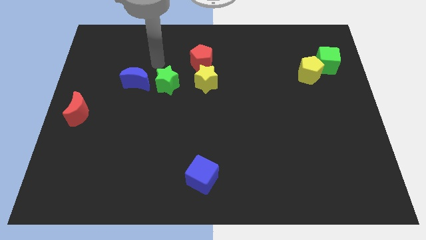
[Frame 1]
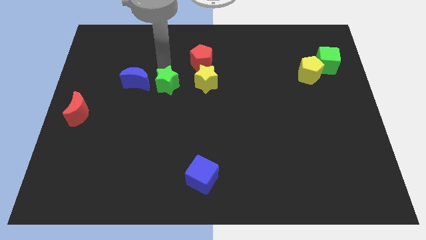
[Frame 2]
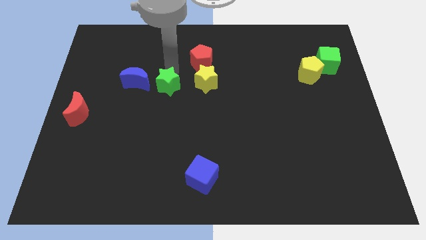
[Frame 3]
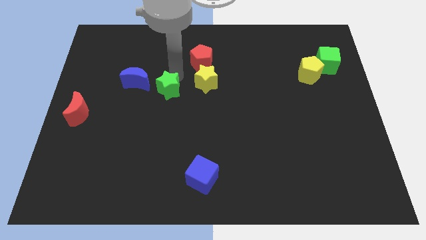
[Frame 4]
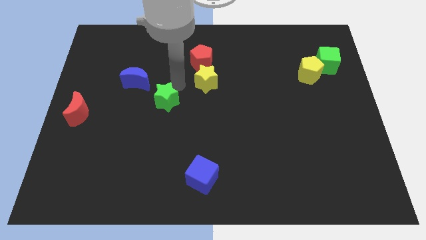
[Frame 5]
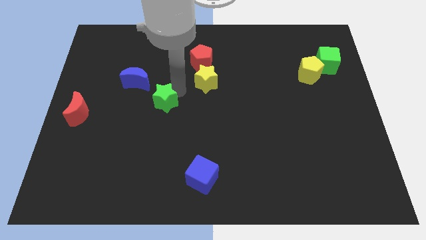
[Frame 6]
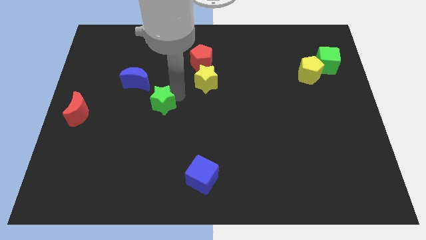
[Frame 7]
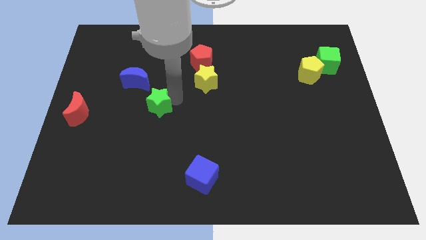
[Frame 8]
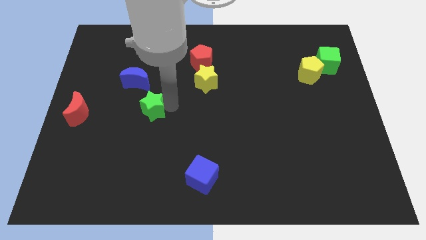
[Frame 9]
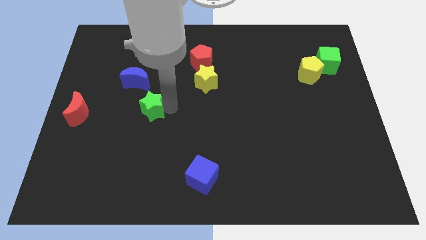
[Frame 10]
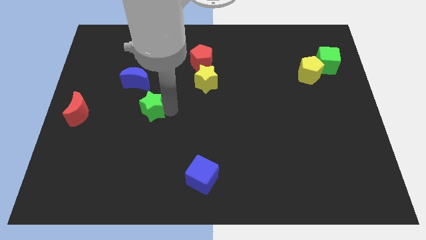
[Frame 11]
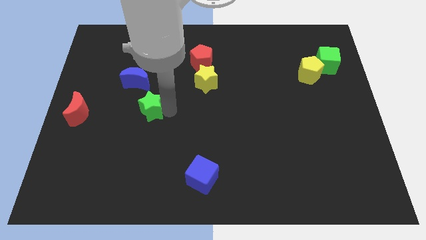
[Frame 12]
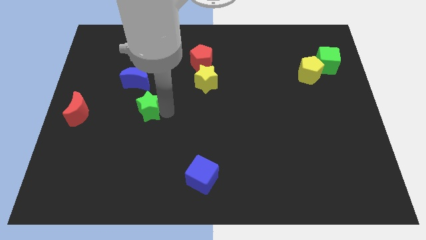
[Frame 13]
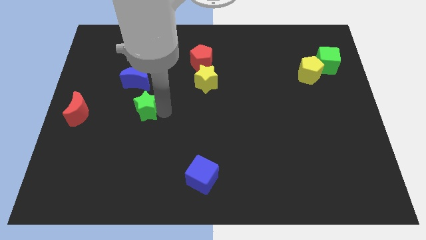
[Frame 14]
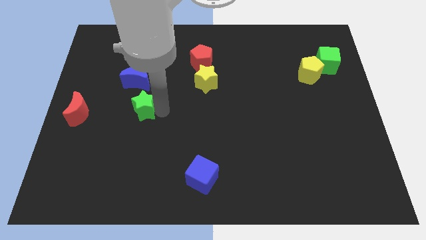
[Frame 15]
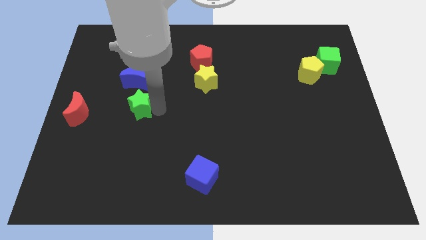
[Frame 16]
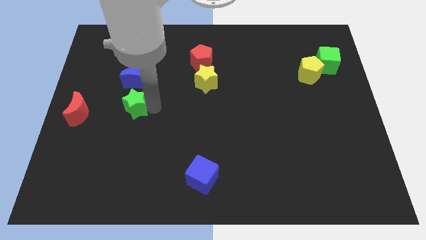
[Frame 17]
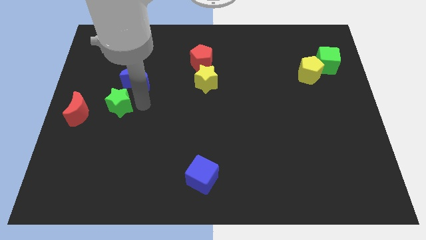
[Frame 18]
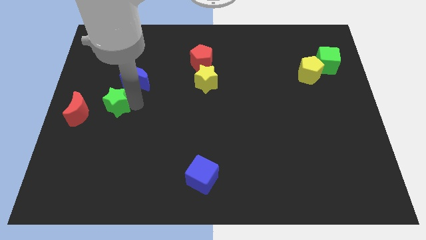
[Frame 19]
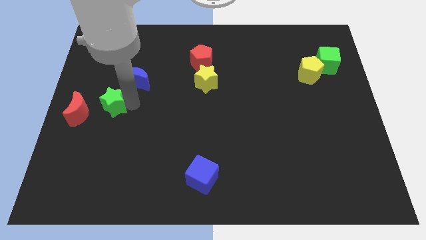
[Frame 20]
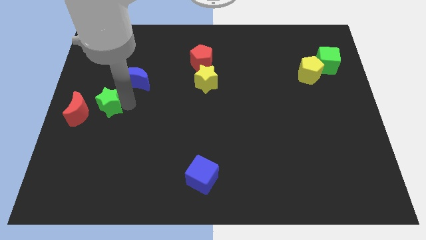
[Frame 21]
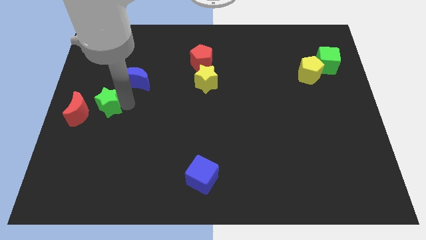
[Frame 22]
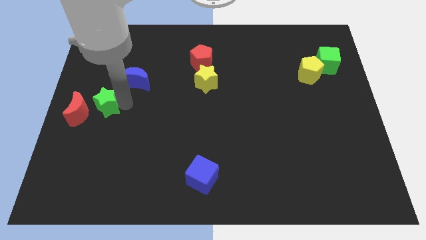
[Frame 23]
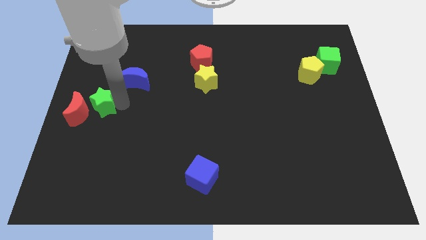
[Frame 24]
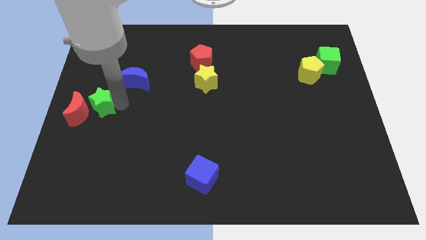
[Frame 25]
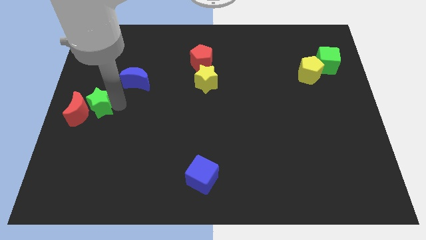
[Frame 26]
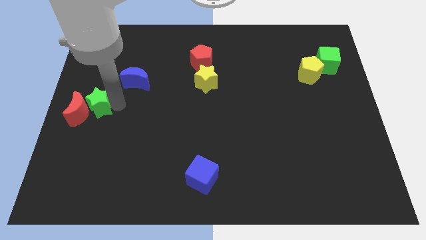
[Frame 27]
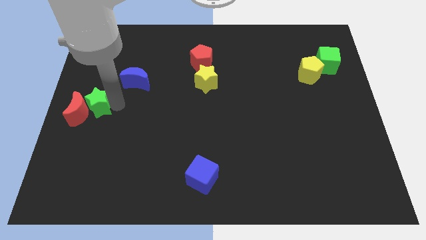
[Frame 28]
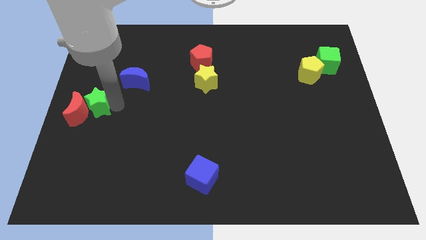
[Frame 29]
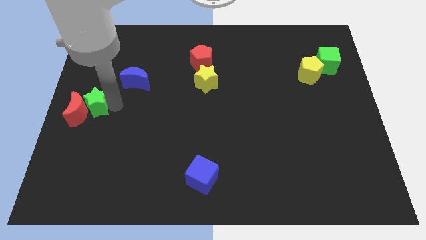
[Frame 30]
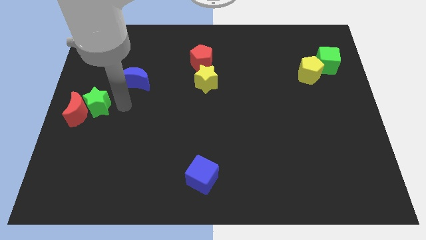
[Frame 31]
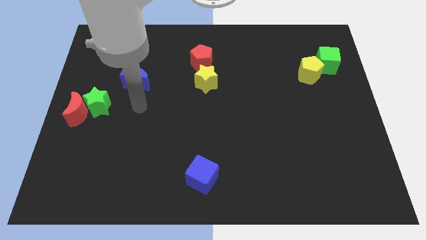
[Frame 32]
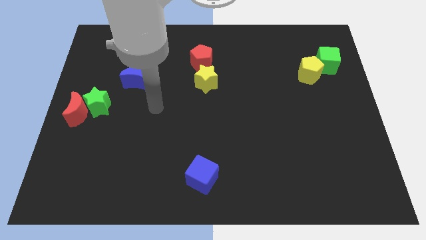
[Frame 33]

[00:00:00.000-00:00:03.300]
make the green star to touch the red crescent

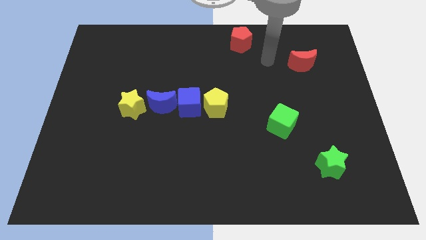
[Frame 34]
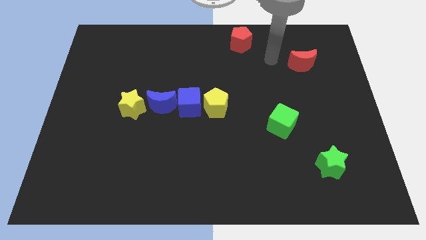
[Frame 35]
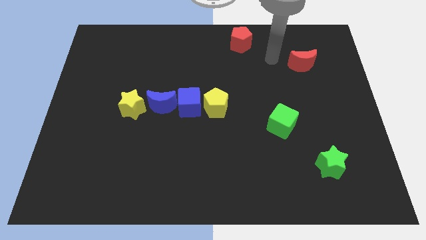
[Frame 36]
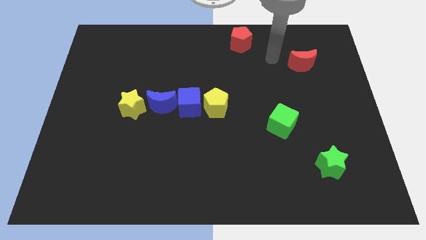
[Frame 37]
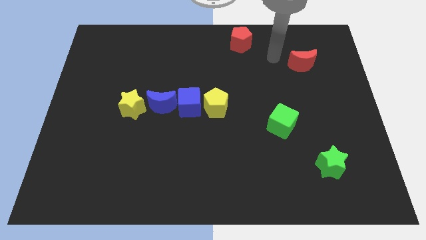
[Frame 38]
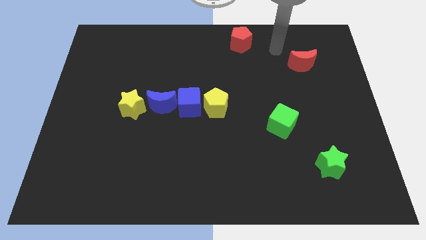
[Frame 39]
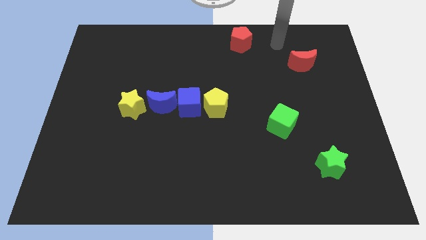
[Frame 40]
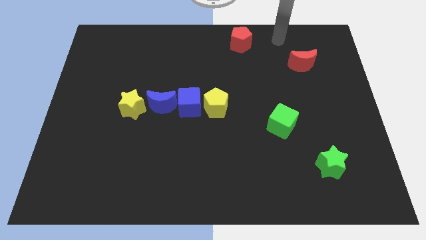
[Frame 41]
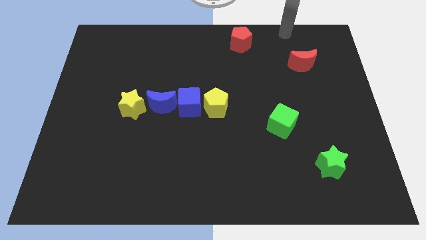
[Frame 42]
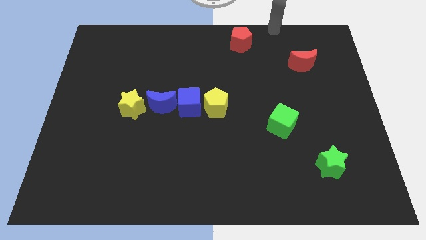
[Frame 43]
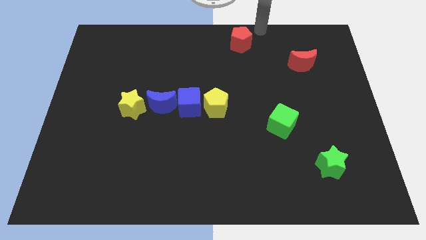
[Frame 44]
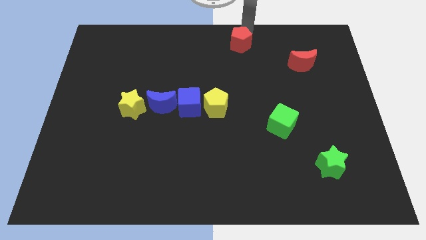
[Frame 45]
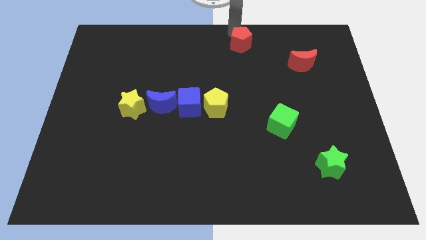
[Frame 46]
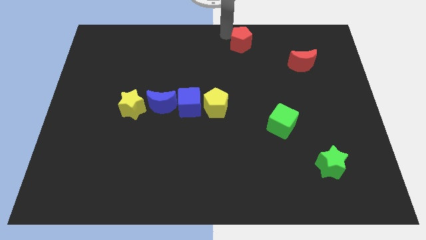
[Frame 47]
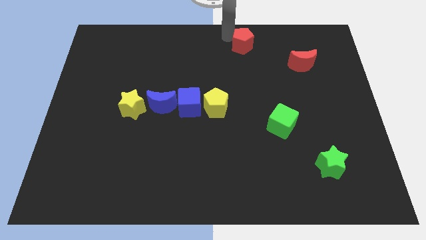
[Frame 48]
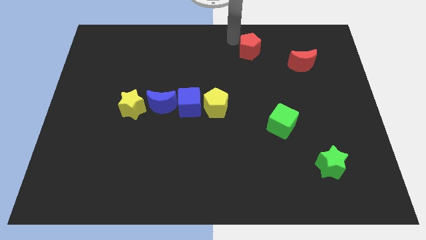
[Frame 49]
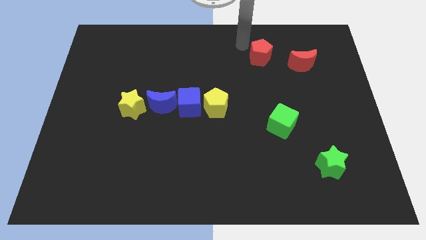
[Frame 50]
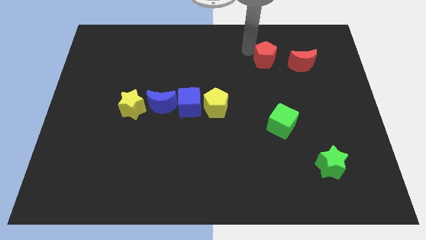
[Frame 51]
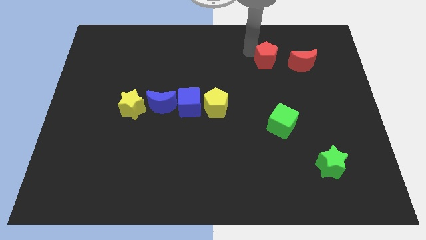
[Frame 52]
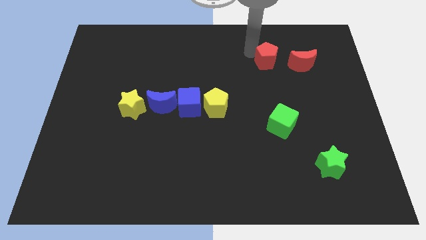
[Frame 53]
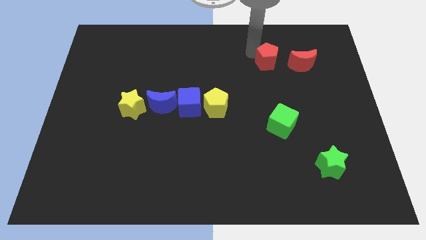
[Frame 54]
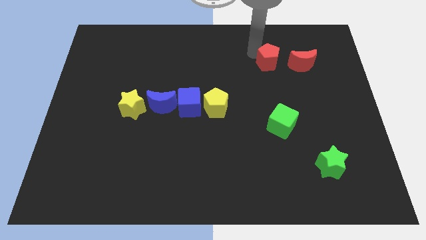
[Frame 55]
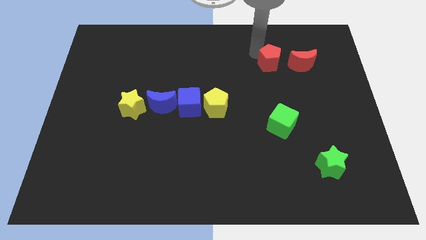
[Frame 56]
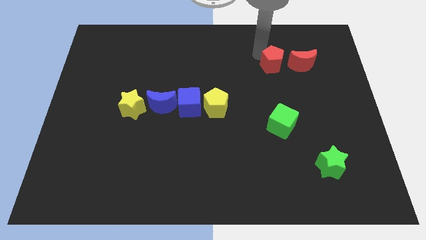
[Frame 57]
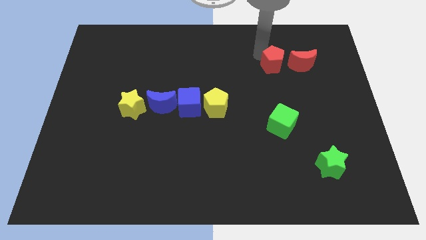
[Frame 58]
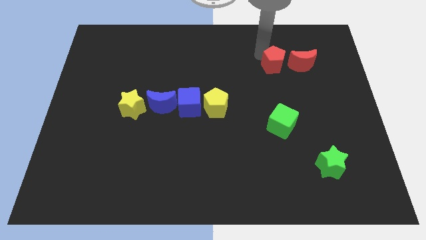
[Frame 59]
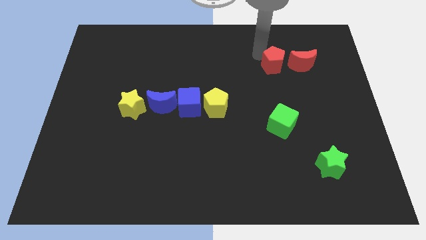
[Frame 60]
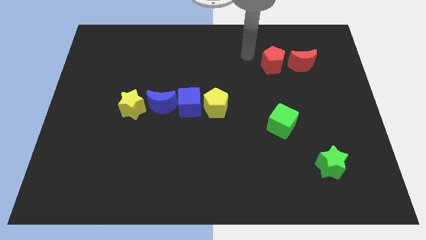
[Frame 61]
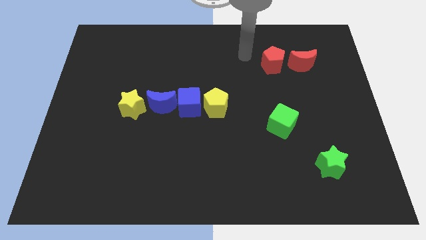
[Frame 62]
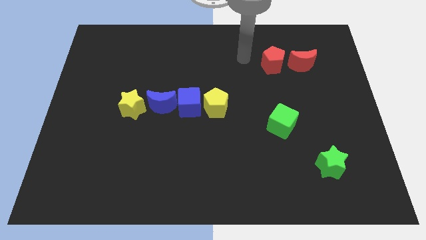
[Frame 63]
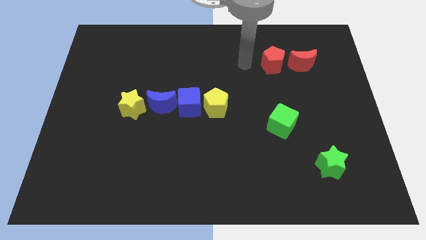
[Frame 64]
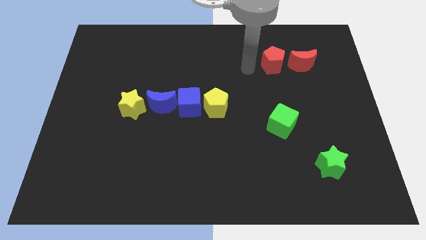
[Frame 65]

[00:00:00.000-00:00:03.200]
place the red pentagon to the left of the red moon

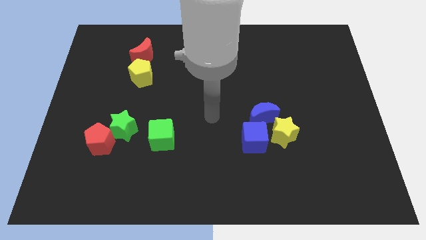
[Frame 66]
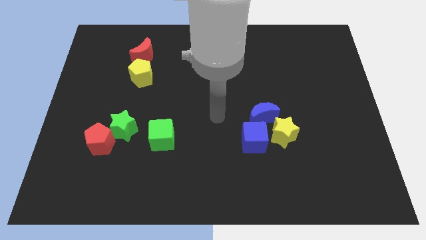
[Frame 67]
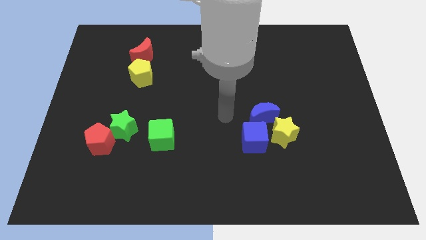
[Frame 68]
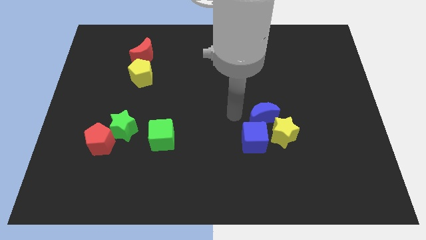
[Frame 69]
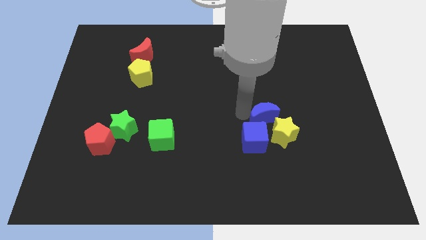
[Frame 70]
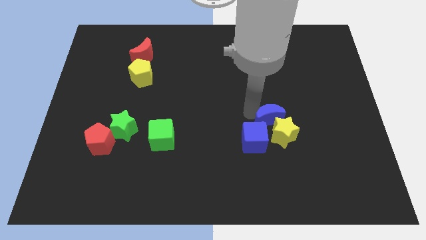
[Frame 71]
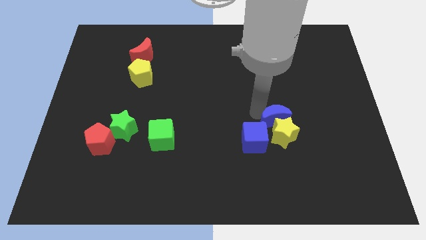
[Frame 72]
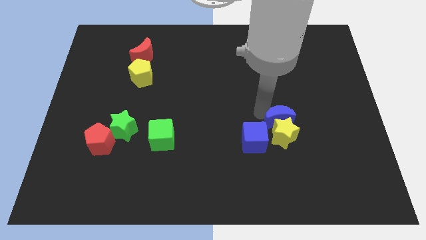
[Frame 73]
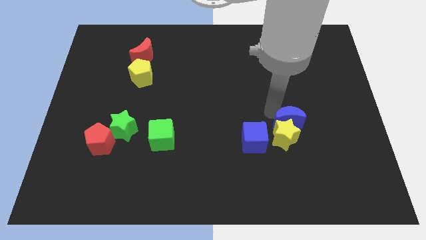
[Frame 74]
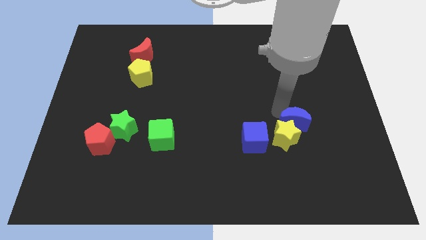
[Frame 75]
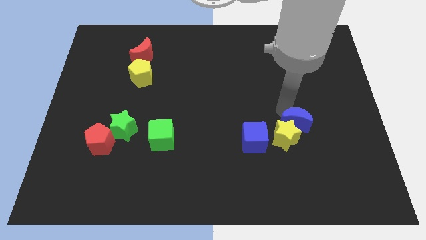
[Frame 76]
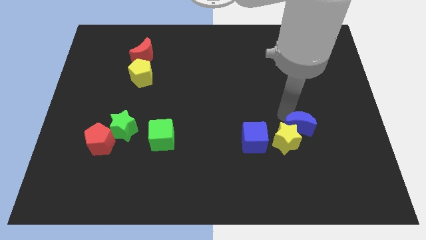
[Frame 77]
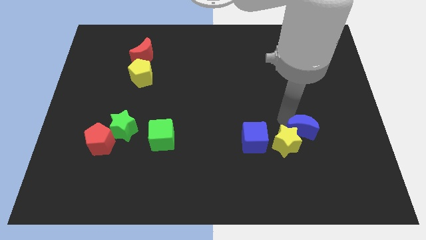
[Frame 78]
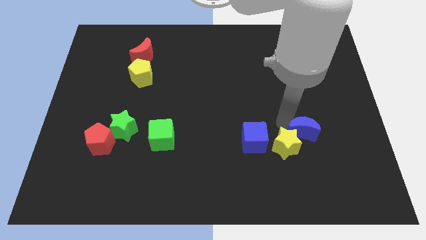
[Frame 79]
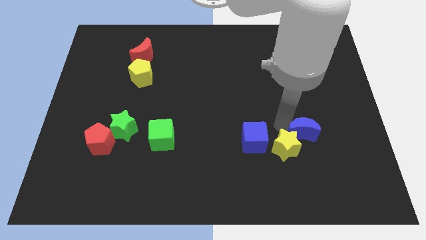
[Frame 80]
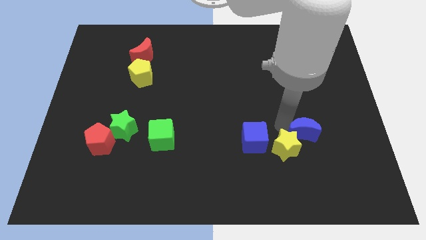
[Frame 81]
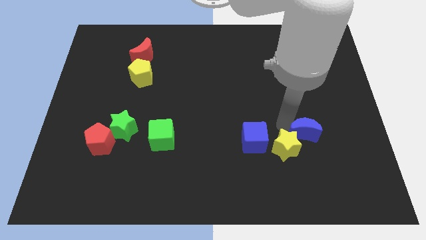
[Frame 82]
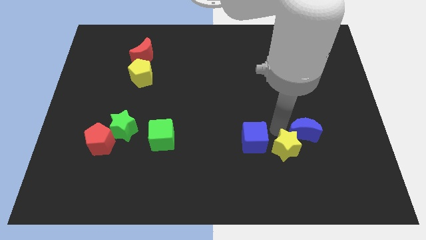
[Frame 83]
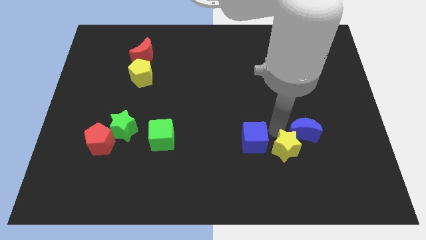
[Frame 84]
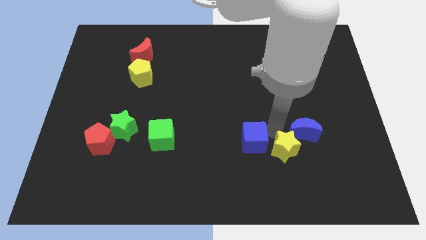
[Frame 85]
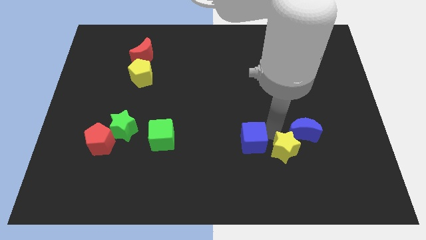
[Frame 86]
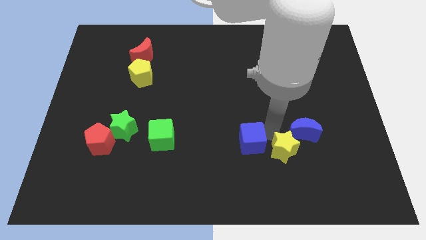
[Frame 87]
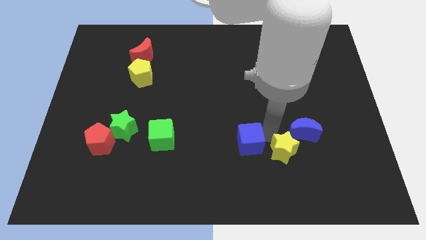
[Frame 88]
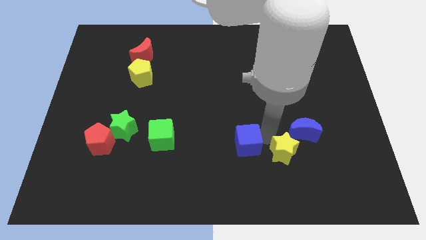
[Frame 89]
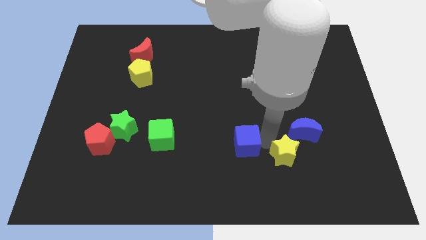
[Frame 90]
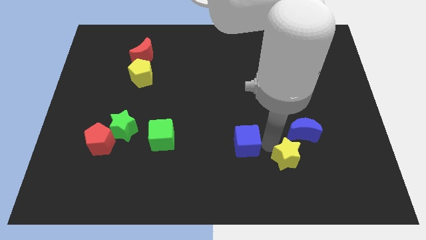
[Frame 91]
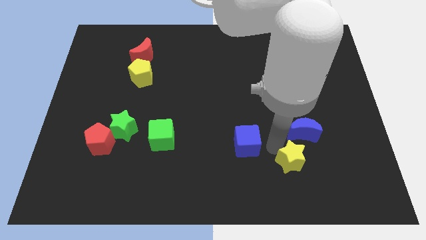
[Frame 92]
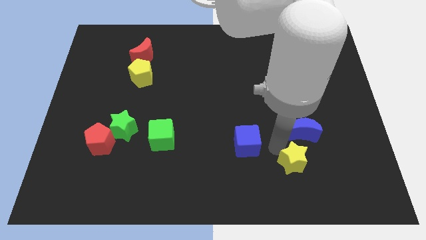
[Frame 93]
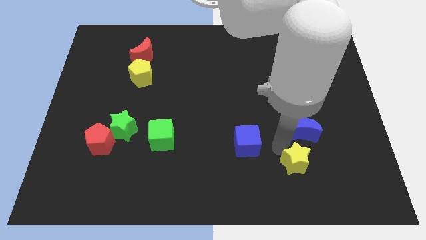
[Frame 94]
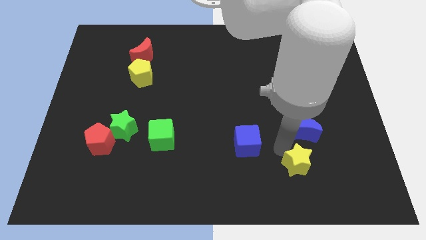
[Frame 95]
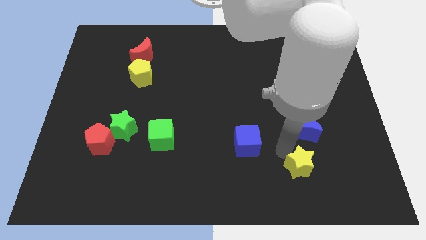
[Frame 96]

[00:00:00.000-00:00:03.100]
place your arm in between blue blocks and yellow star
